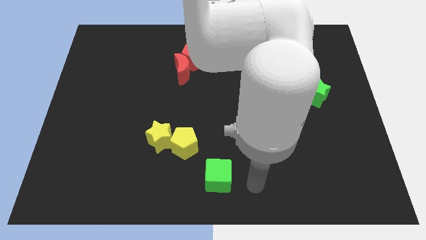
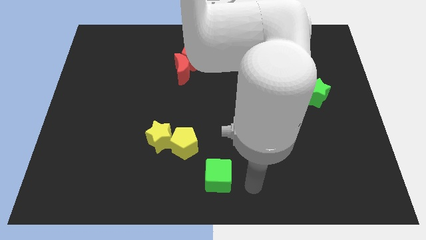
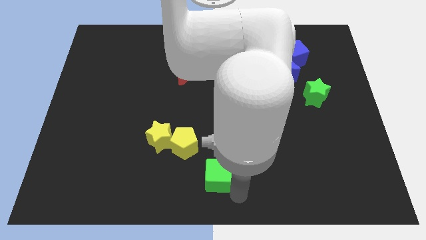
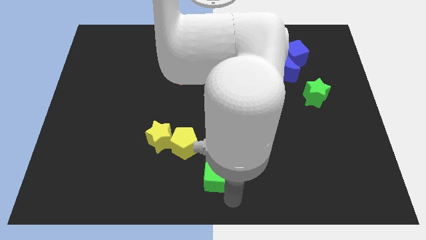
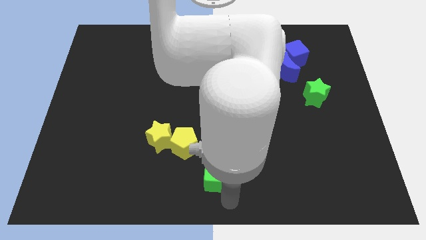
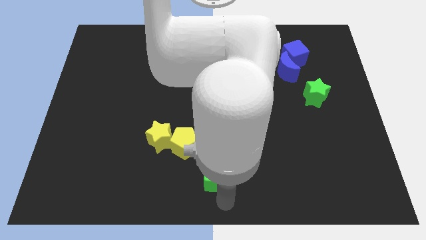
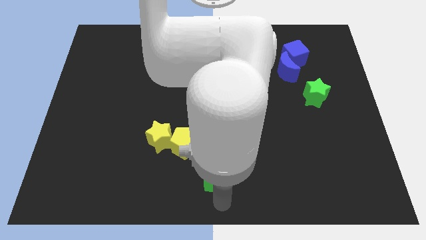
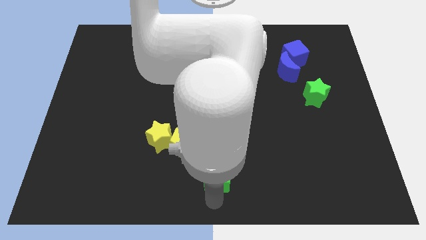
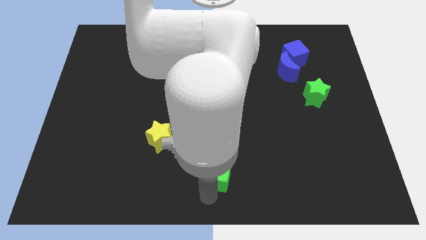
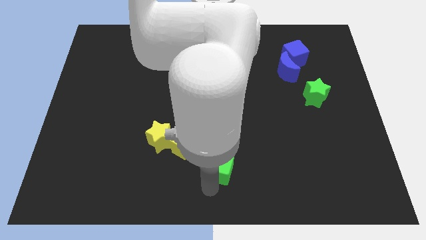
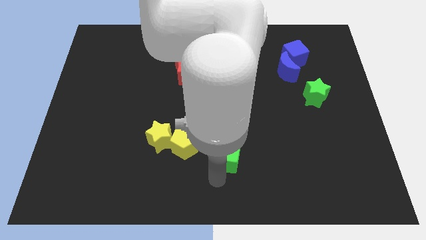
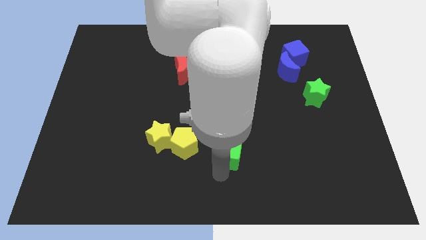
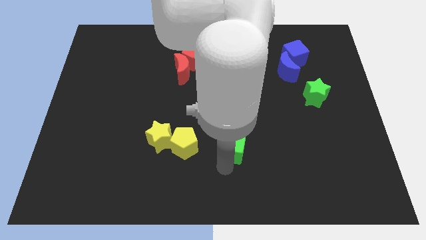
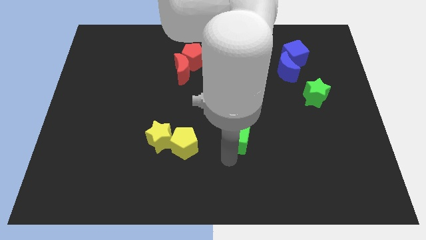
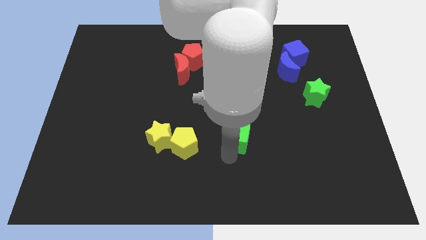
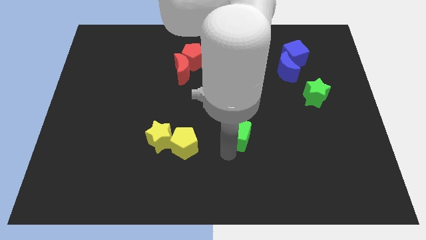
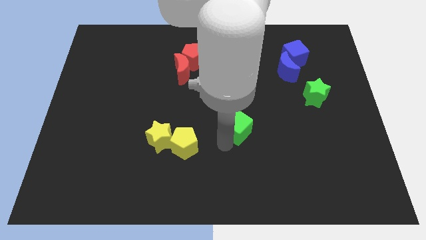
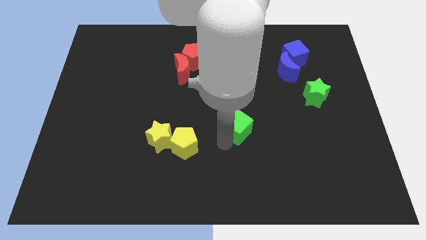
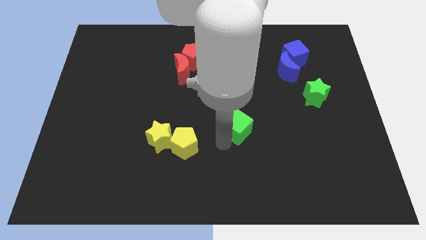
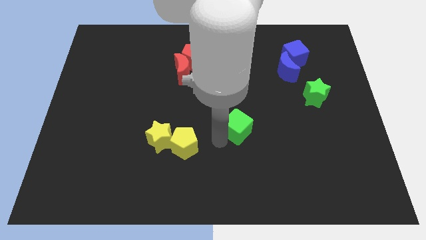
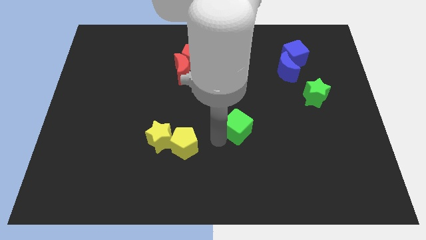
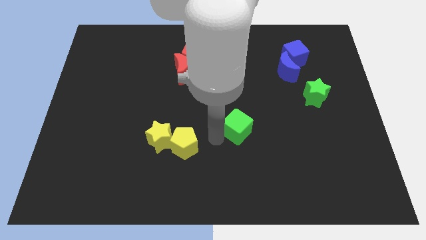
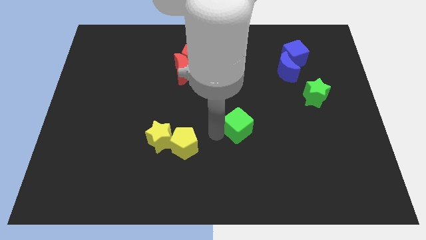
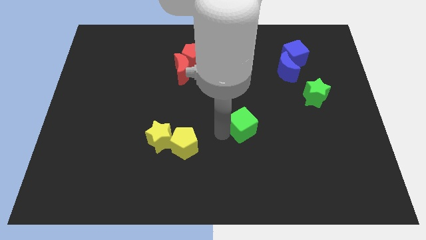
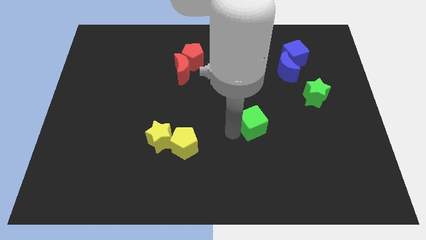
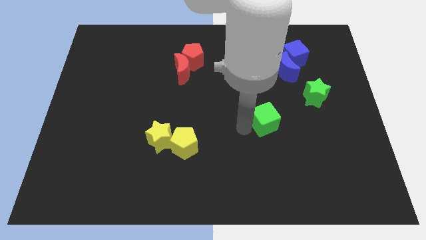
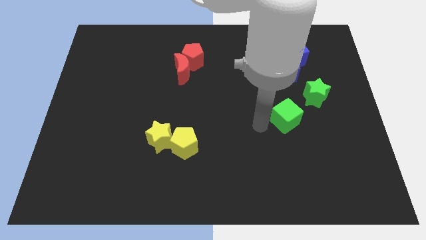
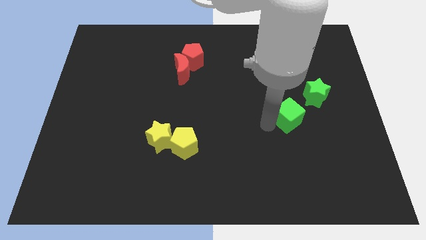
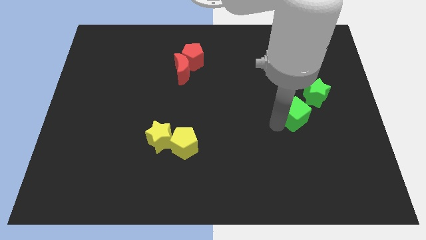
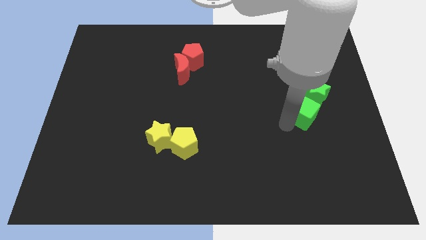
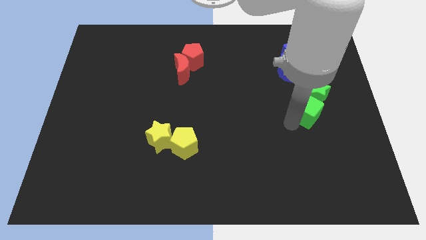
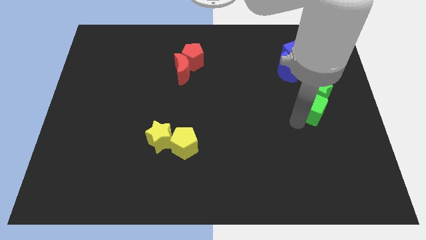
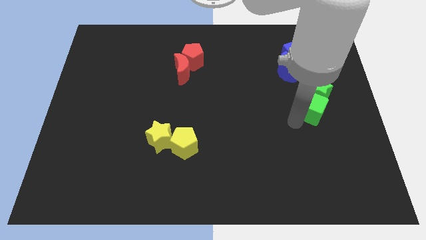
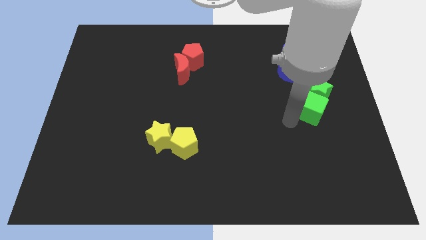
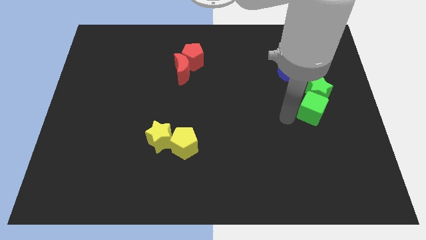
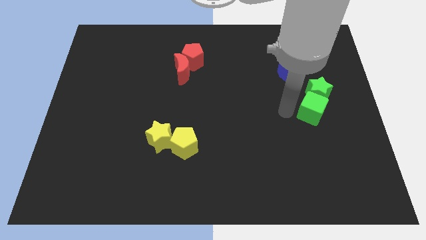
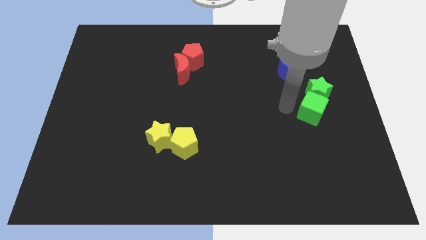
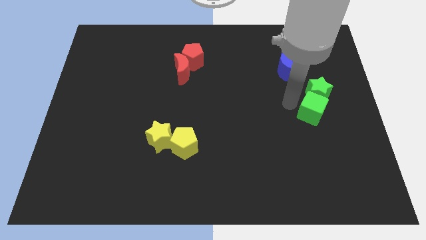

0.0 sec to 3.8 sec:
move green cube to the diagonal bottom left of green star

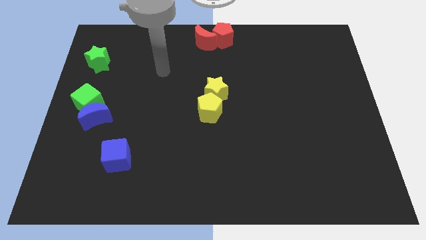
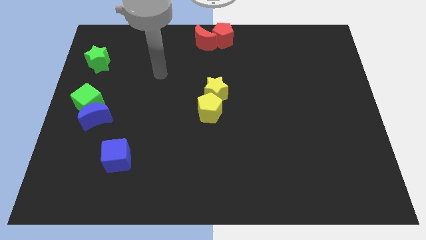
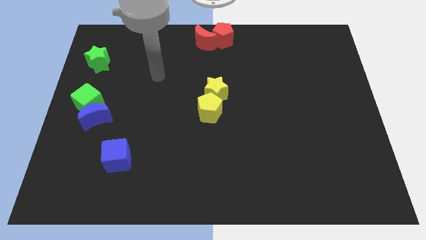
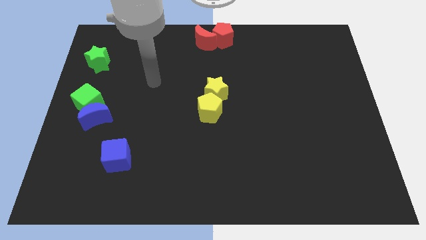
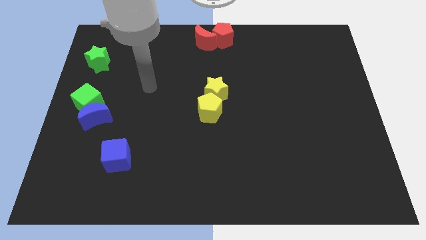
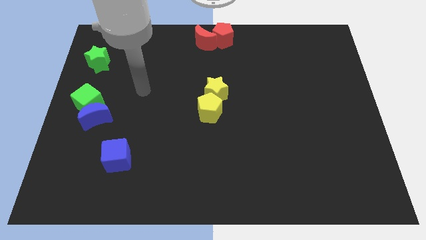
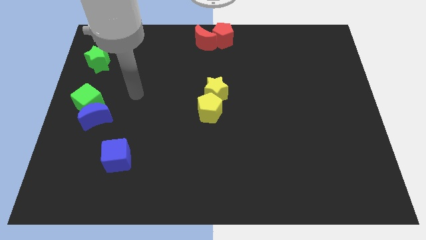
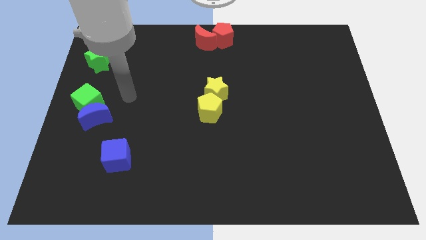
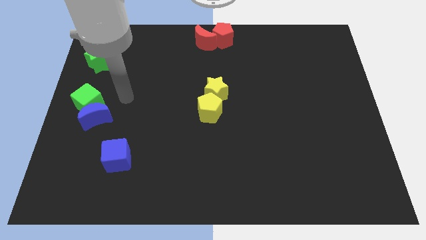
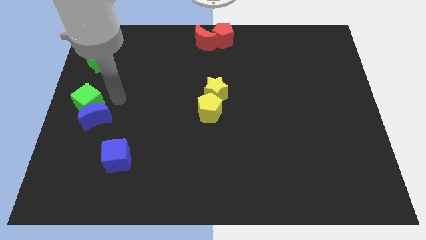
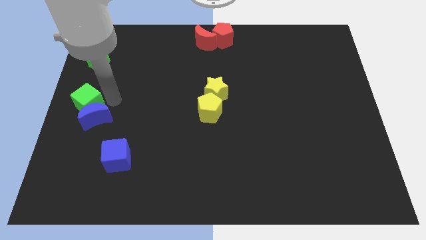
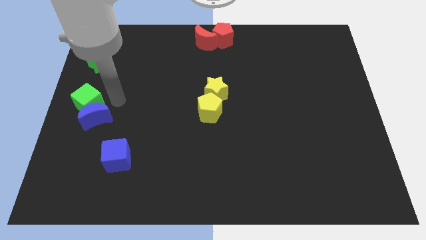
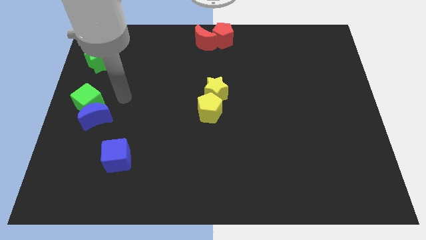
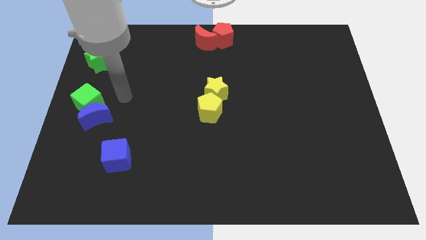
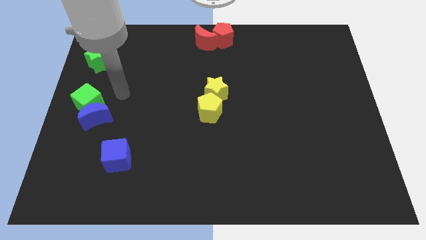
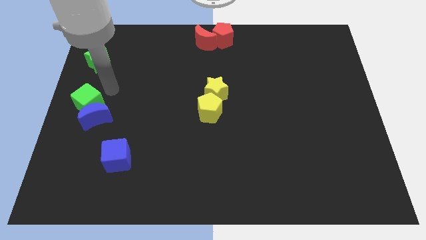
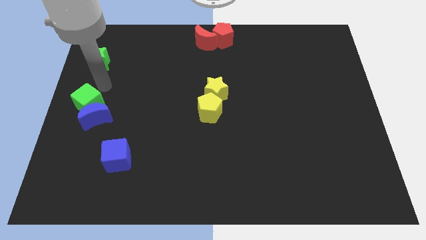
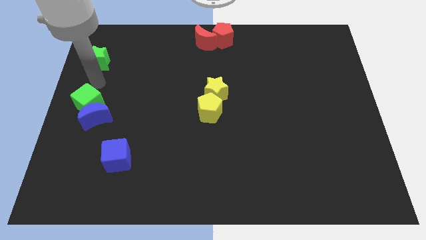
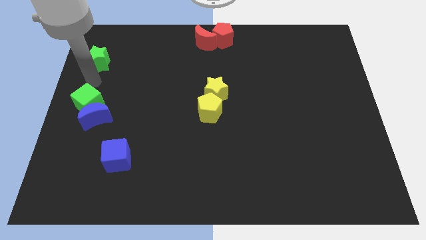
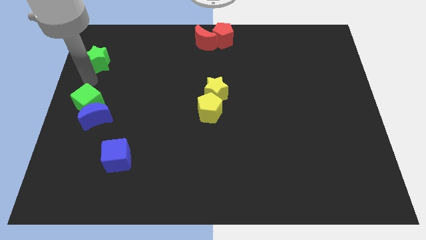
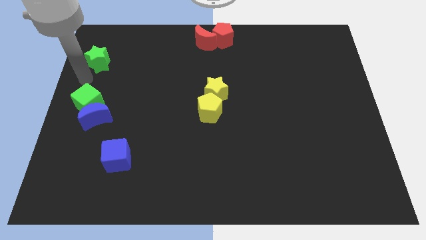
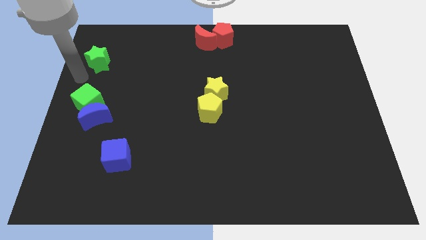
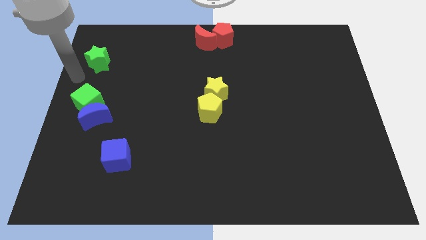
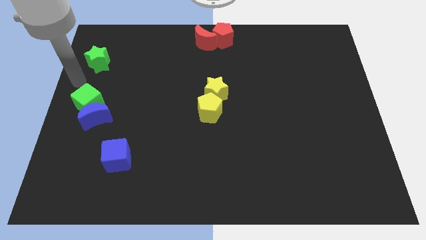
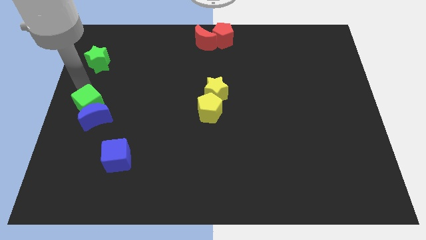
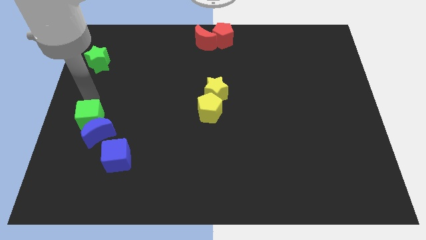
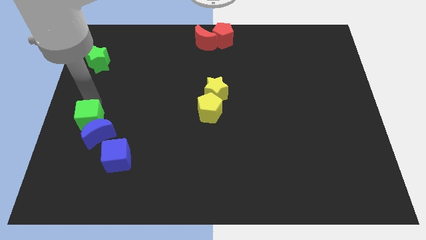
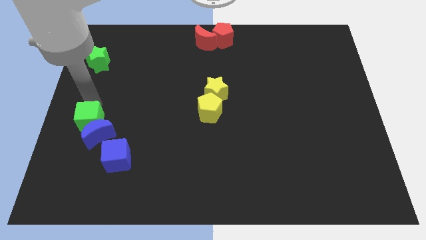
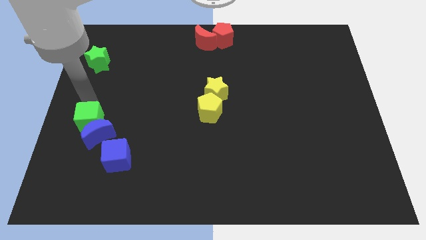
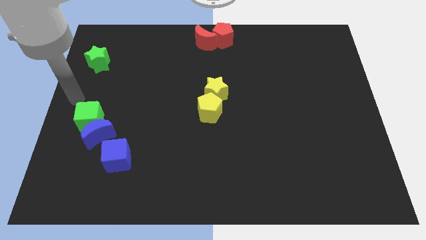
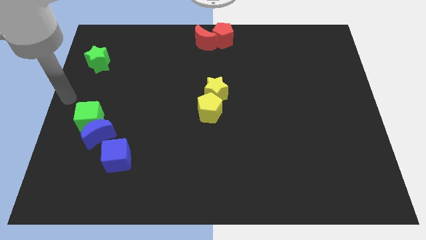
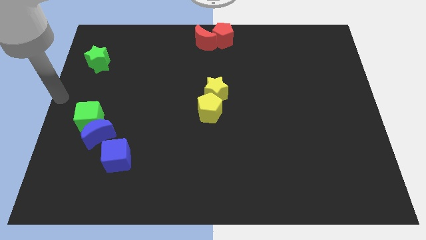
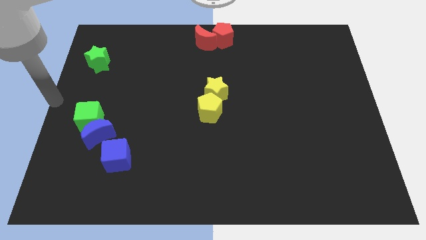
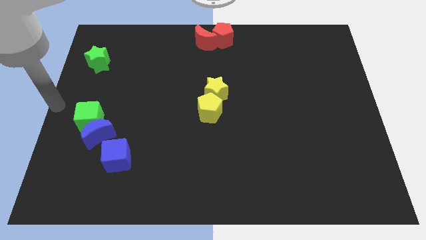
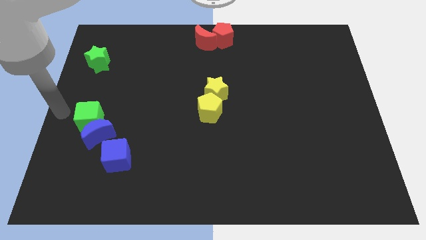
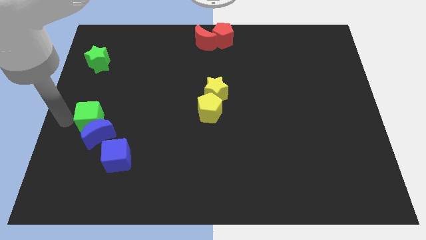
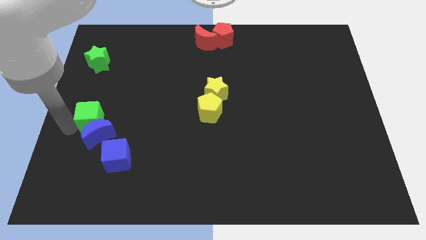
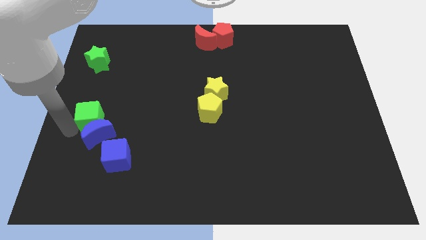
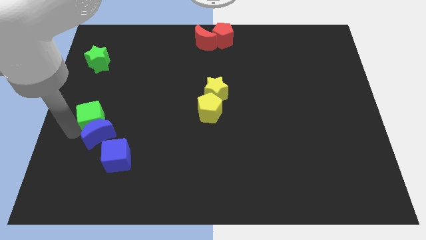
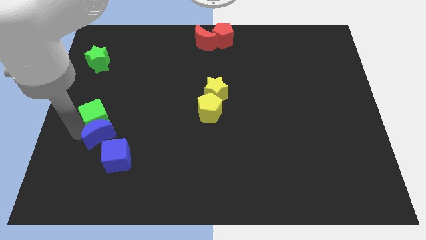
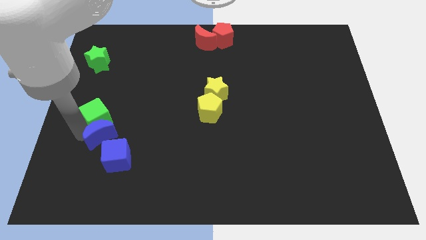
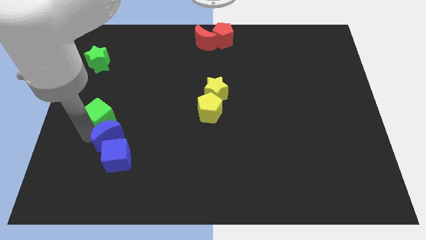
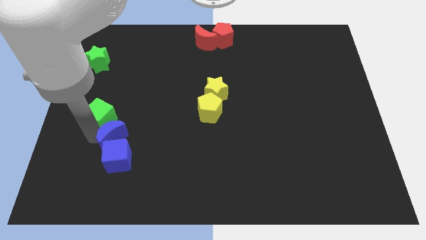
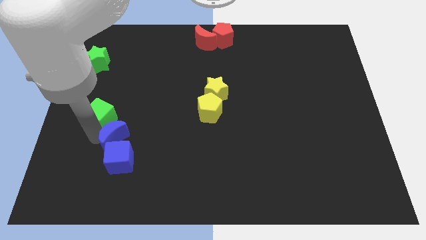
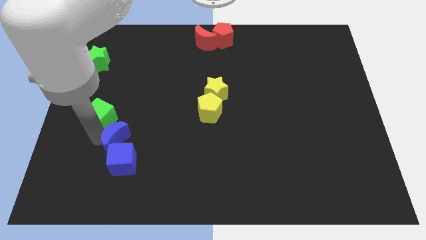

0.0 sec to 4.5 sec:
push the green cube into the blue moon

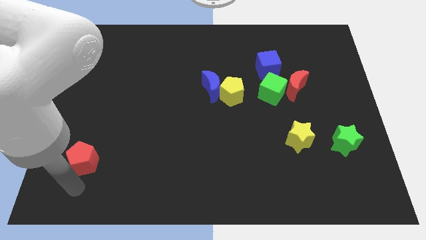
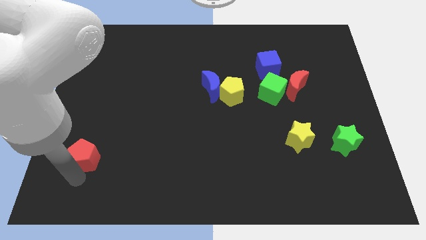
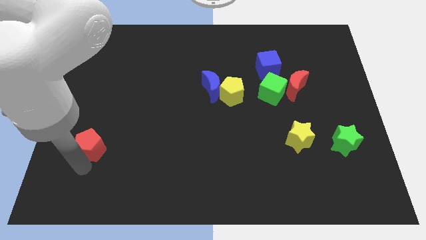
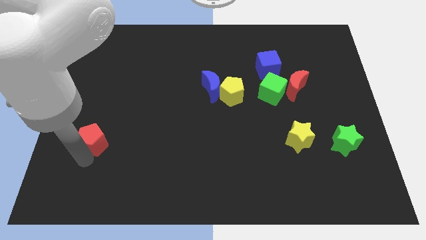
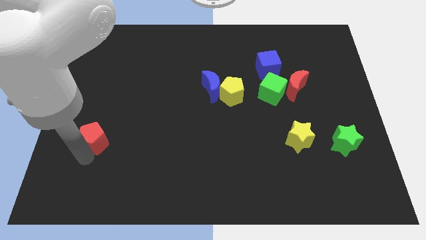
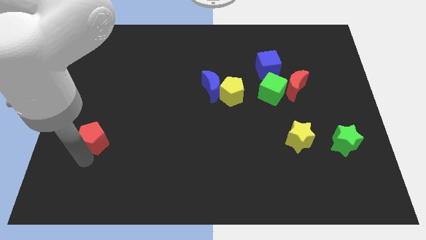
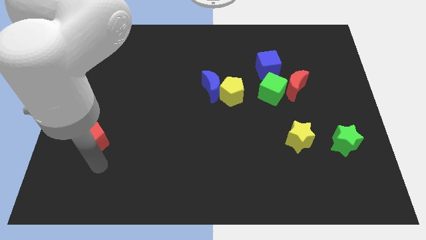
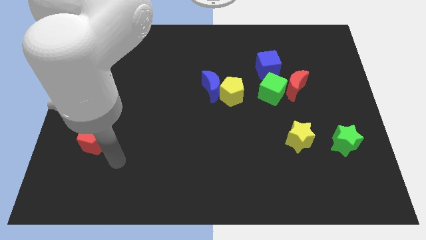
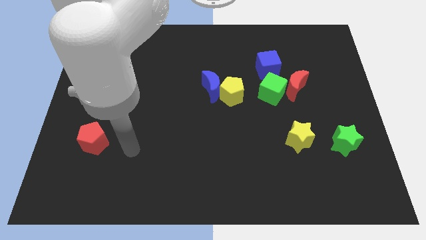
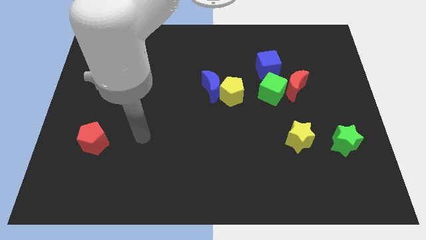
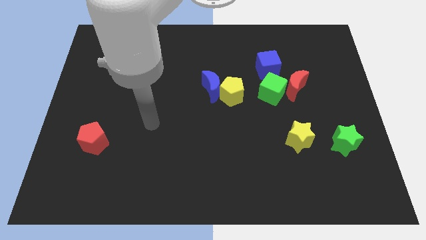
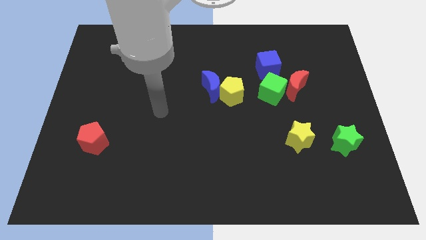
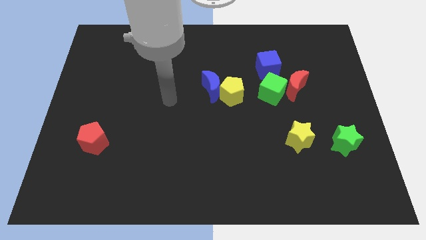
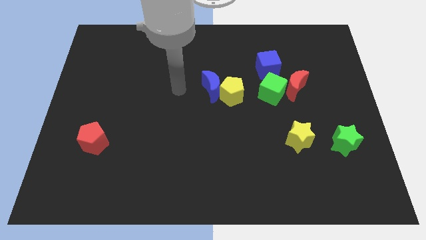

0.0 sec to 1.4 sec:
slide the red pentagon slightly up
